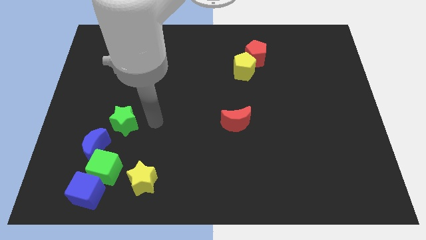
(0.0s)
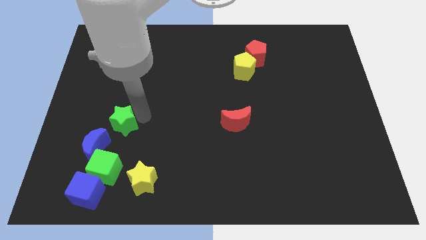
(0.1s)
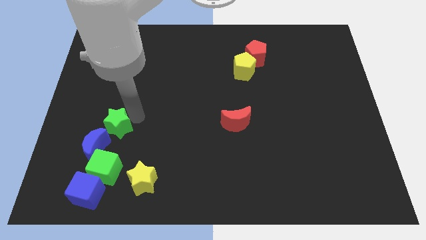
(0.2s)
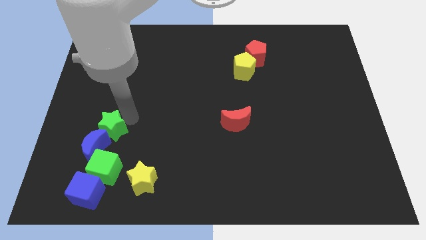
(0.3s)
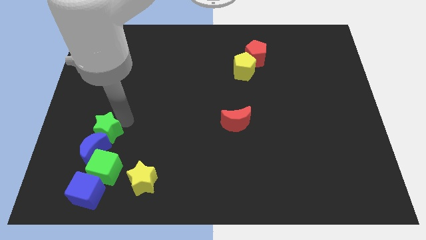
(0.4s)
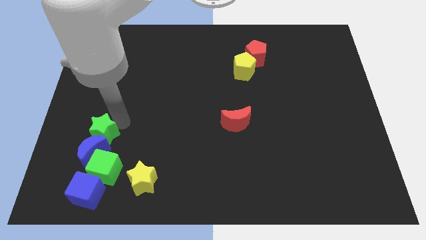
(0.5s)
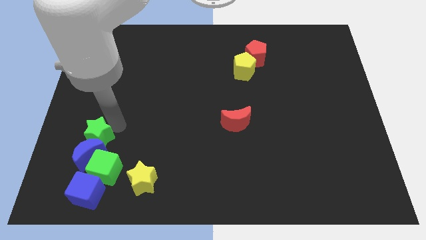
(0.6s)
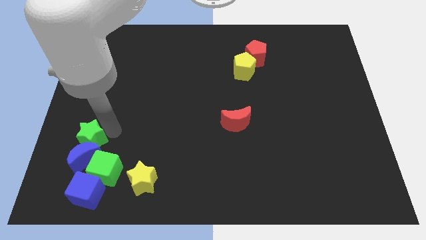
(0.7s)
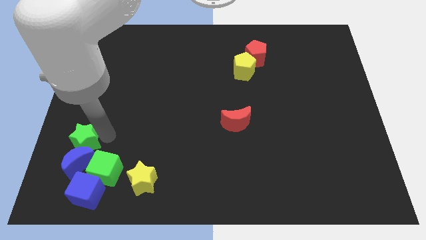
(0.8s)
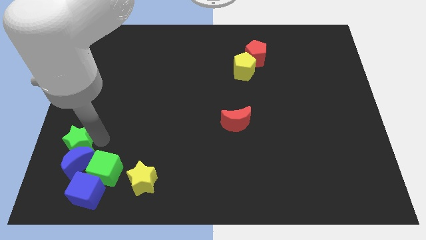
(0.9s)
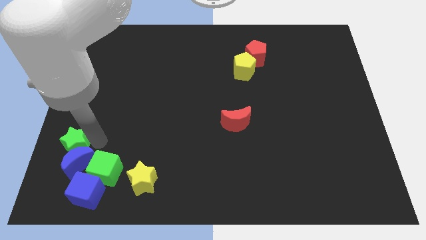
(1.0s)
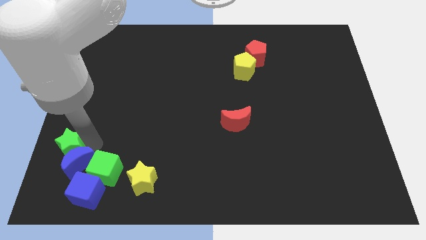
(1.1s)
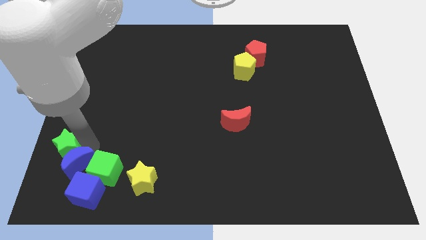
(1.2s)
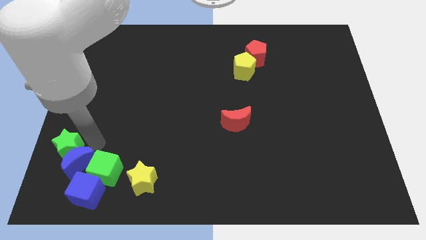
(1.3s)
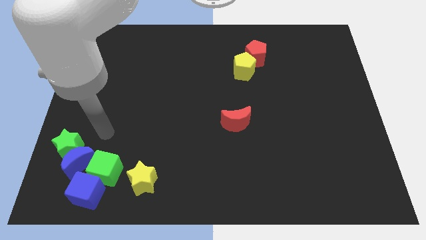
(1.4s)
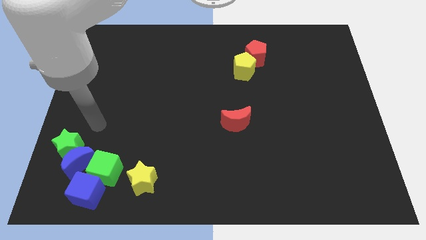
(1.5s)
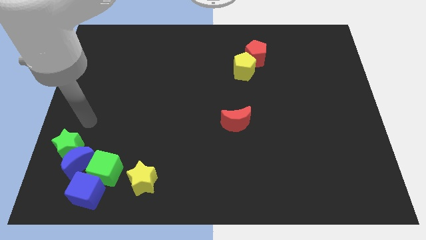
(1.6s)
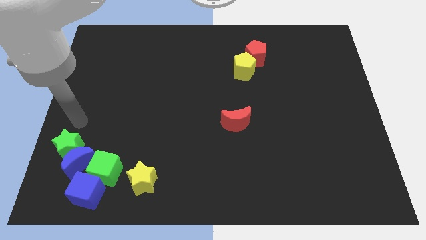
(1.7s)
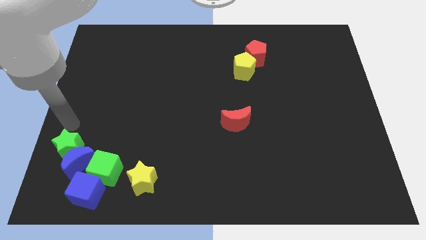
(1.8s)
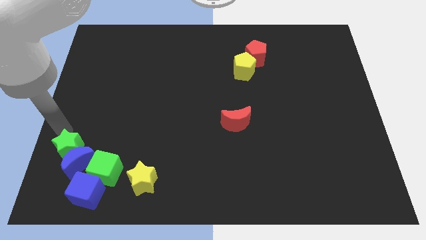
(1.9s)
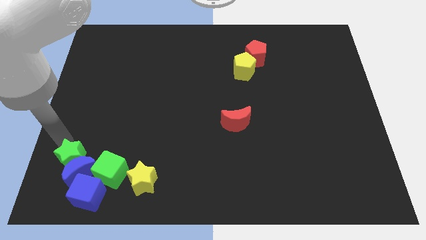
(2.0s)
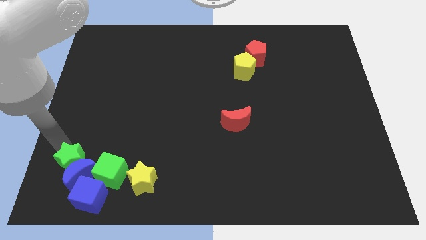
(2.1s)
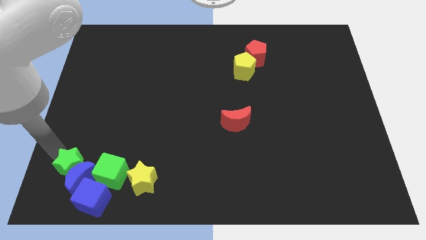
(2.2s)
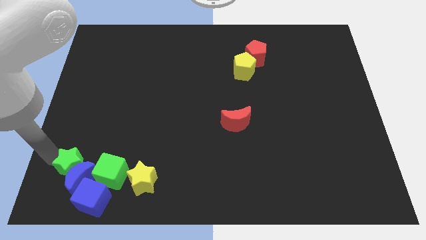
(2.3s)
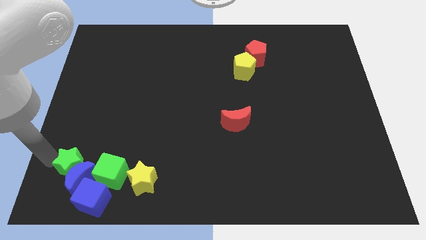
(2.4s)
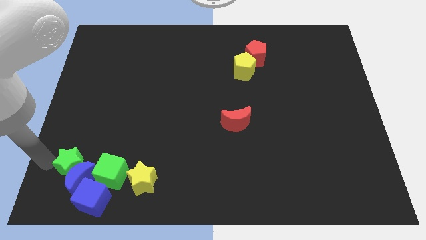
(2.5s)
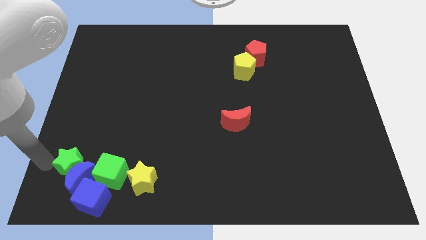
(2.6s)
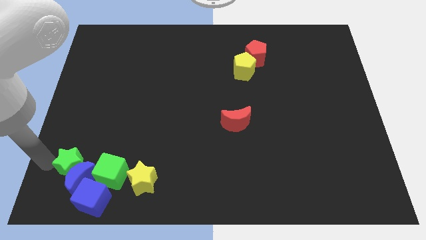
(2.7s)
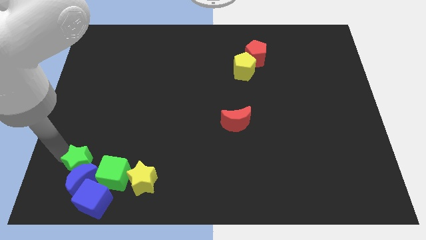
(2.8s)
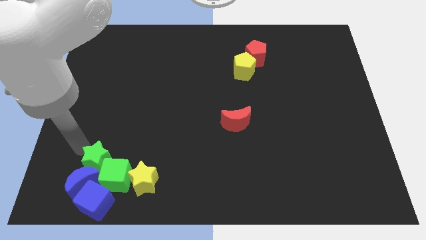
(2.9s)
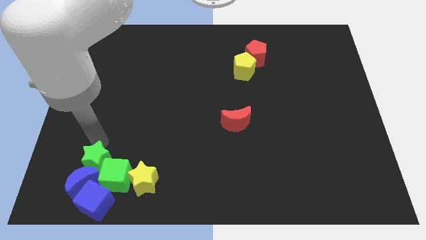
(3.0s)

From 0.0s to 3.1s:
slide the green star on top of blue moon

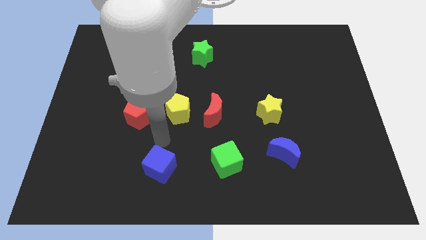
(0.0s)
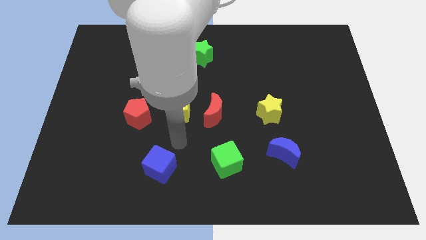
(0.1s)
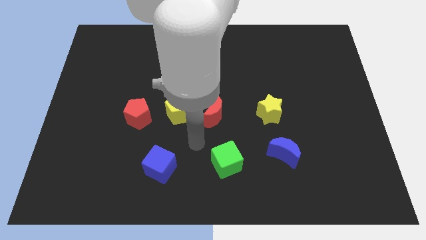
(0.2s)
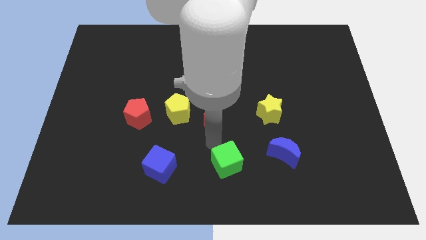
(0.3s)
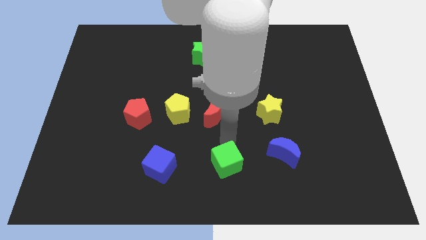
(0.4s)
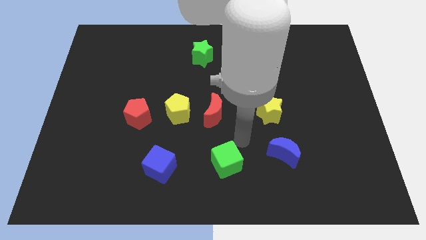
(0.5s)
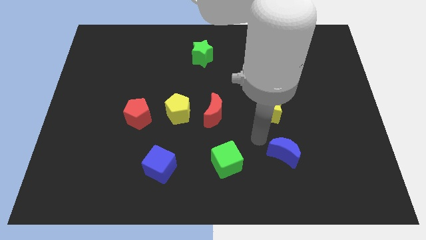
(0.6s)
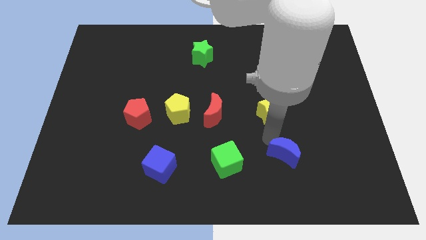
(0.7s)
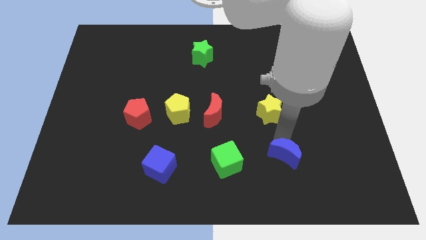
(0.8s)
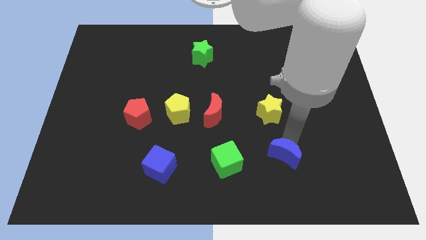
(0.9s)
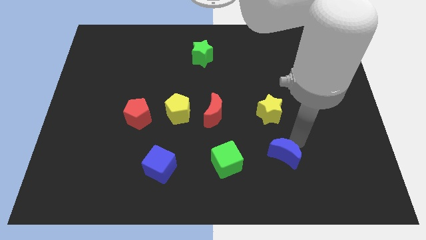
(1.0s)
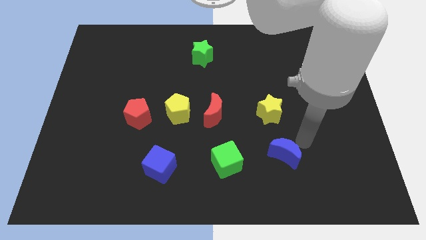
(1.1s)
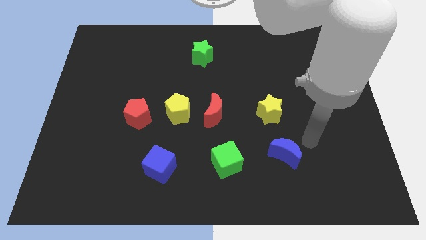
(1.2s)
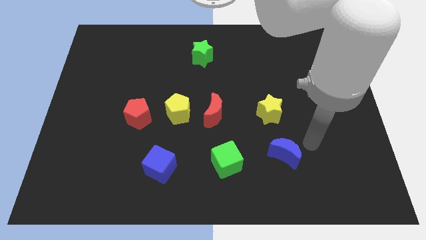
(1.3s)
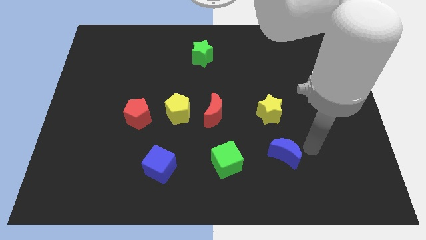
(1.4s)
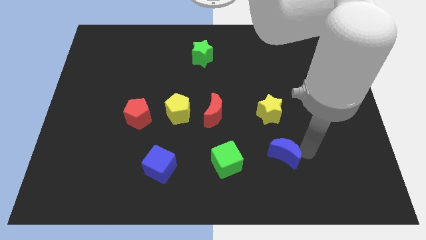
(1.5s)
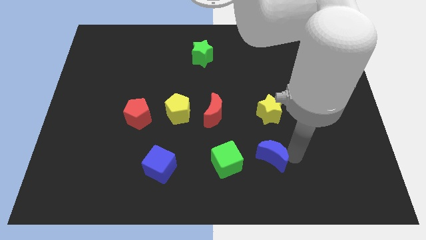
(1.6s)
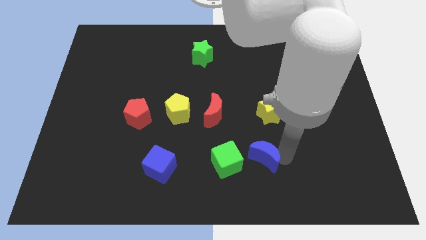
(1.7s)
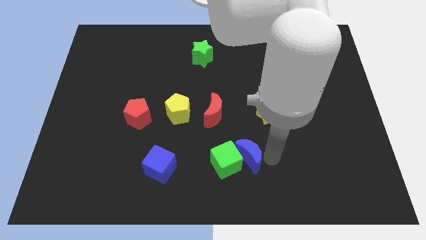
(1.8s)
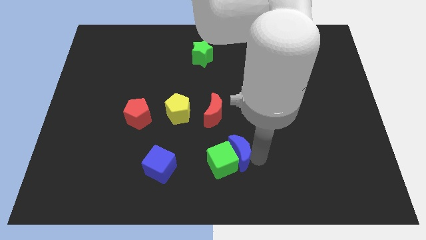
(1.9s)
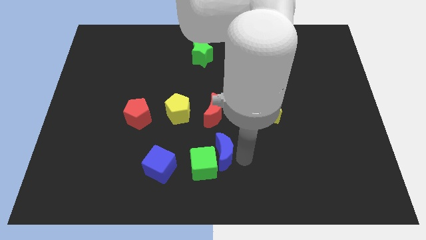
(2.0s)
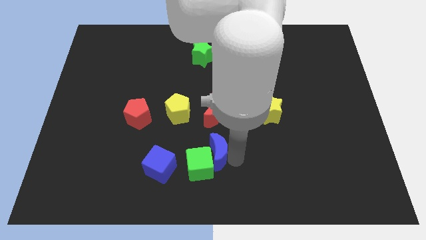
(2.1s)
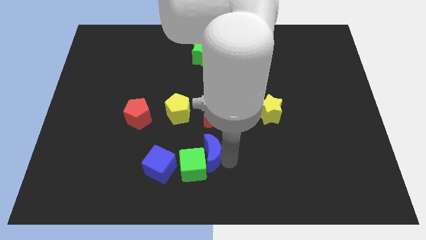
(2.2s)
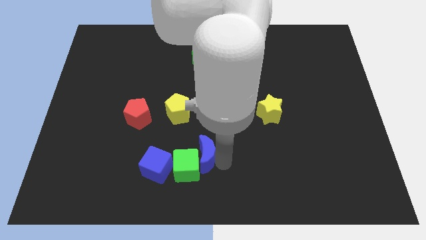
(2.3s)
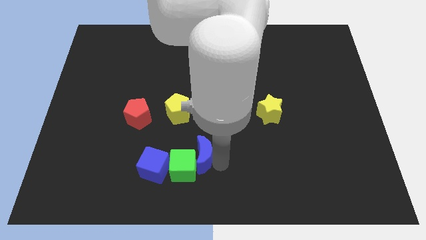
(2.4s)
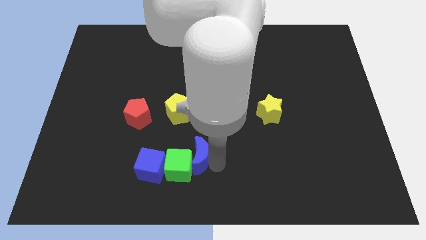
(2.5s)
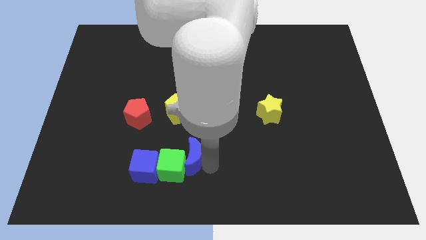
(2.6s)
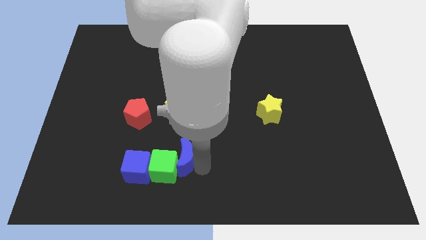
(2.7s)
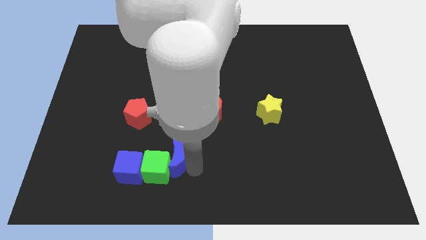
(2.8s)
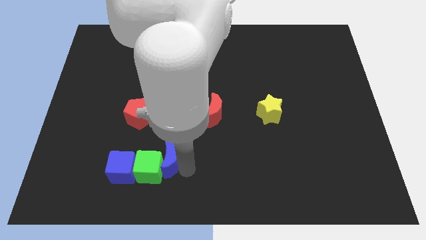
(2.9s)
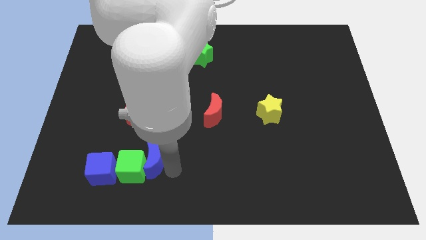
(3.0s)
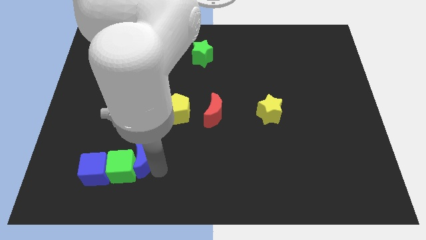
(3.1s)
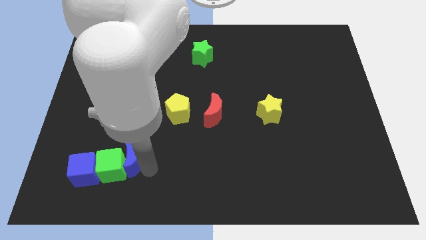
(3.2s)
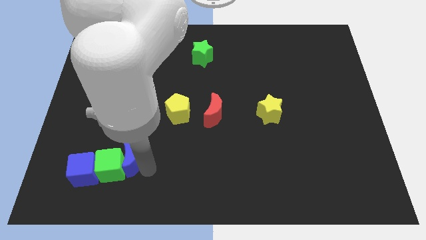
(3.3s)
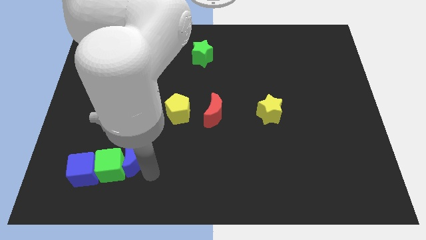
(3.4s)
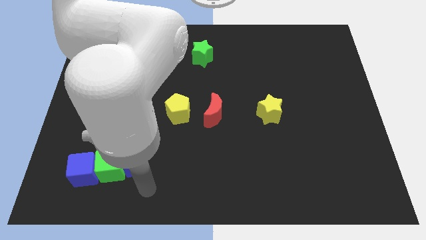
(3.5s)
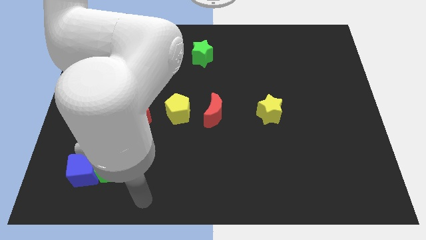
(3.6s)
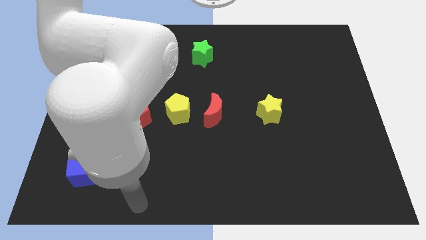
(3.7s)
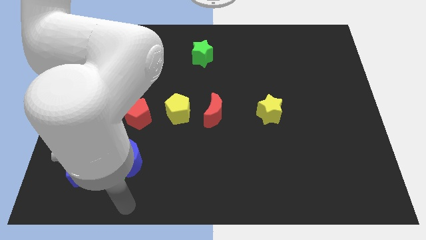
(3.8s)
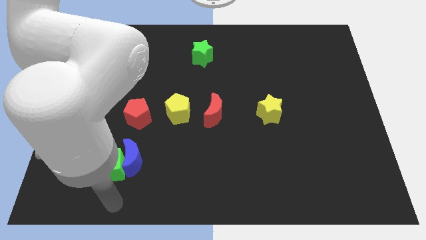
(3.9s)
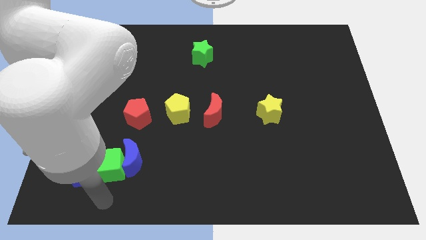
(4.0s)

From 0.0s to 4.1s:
slide the blue crescent green cube and blue cube to the left side of the table

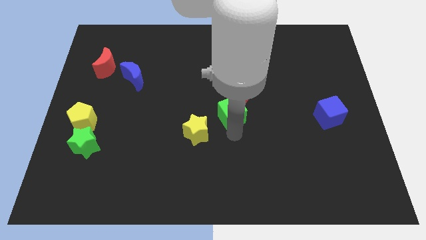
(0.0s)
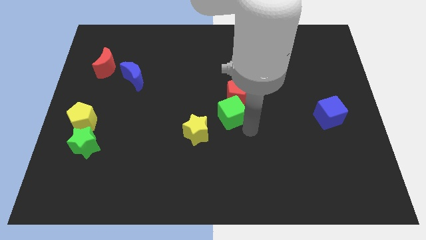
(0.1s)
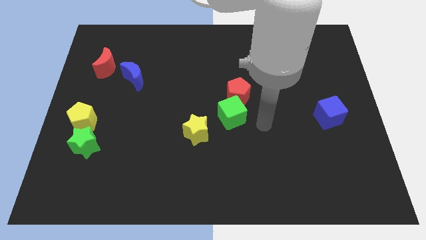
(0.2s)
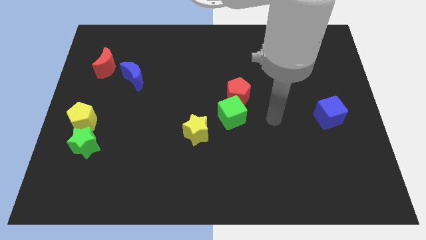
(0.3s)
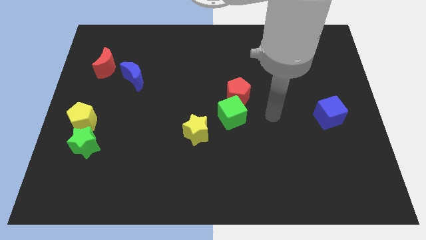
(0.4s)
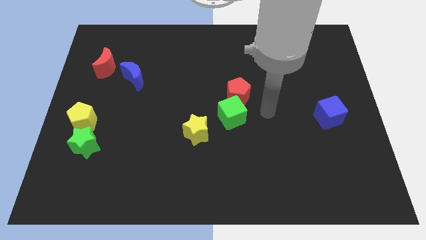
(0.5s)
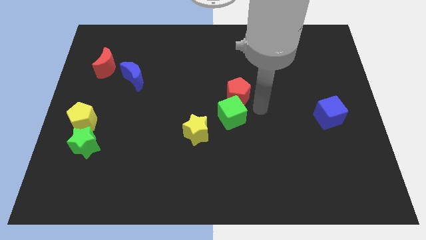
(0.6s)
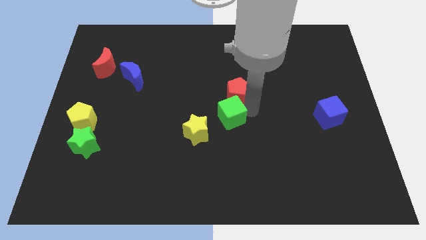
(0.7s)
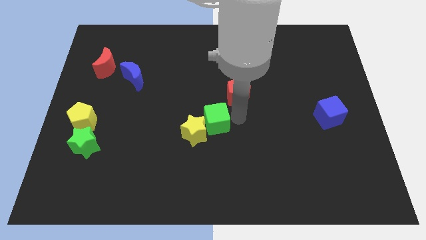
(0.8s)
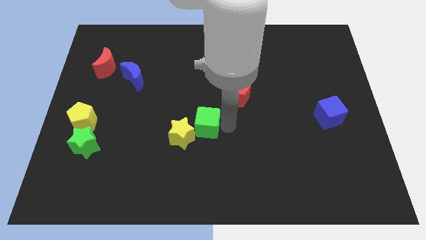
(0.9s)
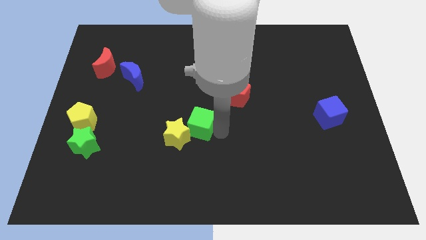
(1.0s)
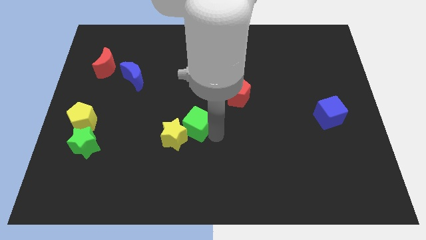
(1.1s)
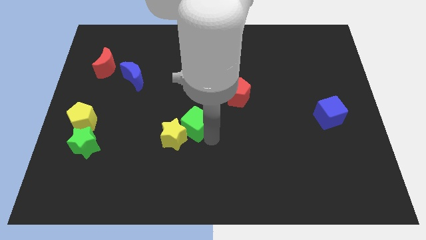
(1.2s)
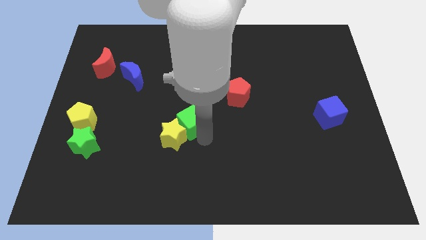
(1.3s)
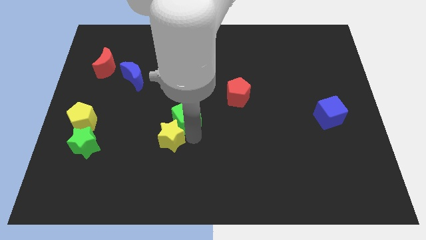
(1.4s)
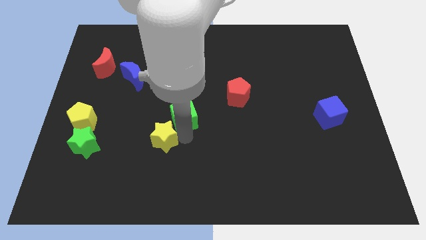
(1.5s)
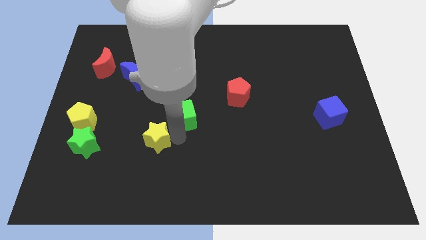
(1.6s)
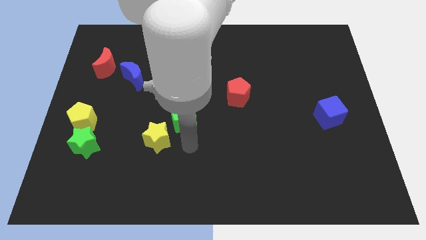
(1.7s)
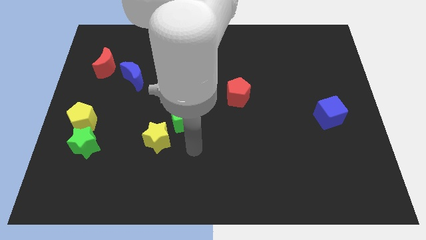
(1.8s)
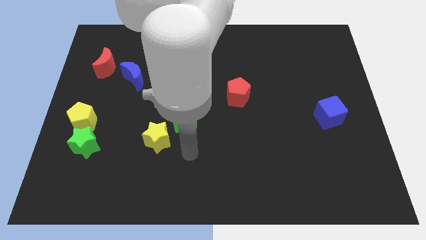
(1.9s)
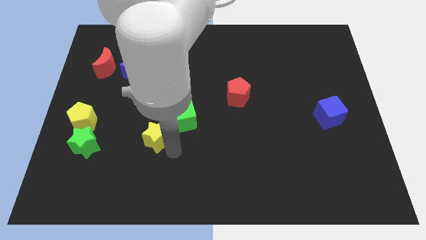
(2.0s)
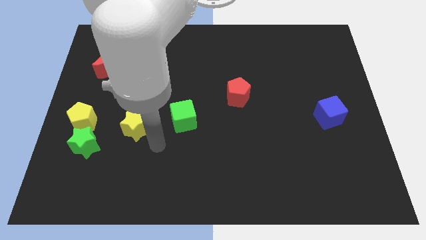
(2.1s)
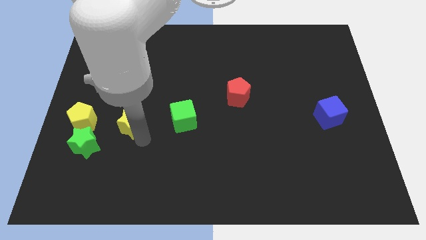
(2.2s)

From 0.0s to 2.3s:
place the yellow star and green cube to the right of yellow pentagon
